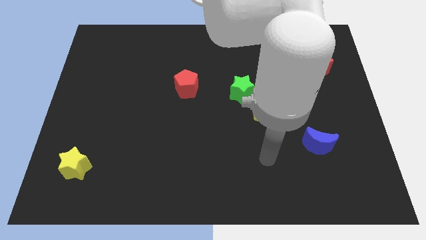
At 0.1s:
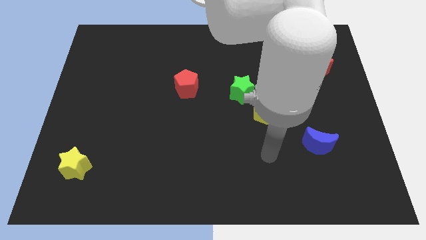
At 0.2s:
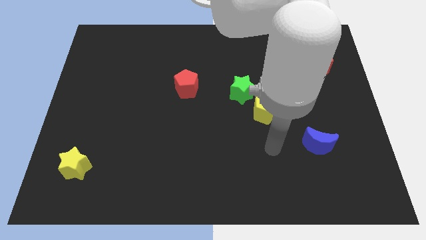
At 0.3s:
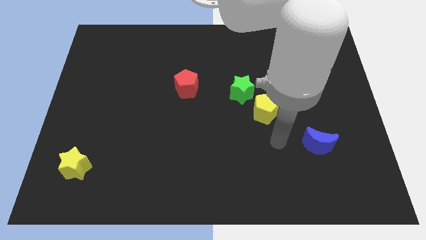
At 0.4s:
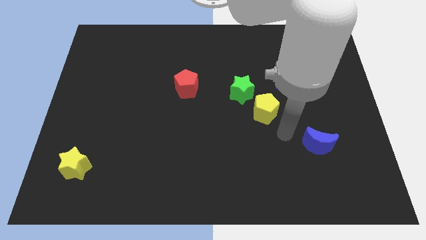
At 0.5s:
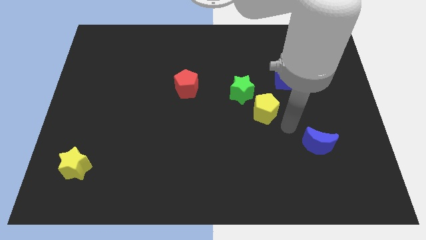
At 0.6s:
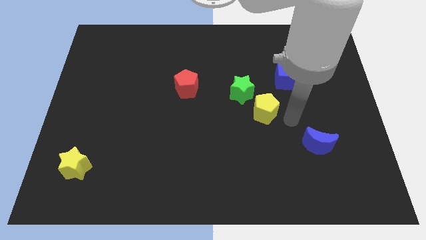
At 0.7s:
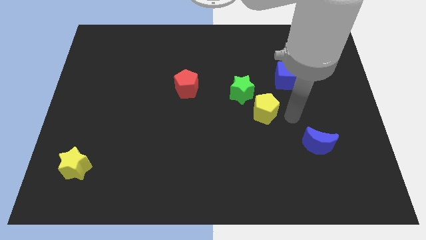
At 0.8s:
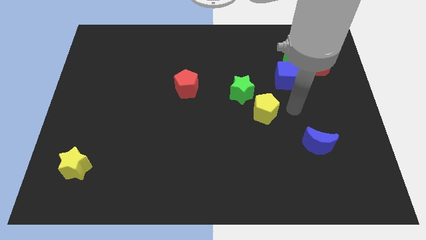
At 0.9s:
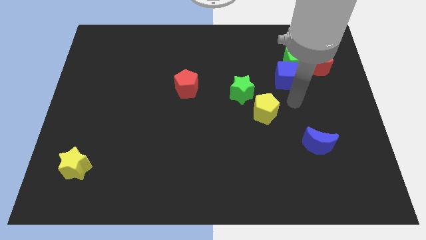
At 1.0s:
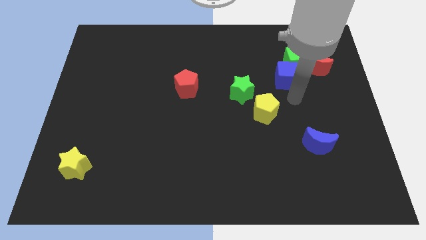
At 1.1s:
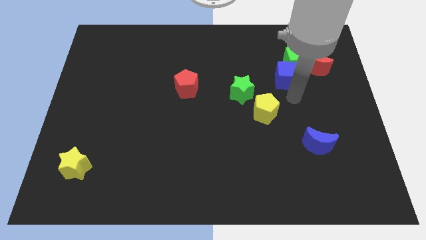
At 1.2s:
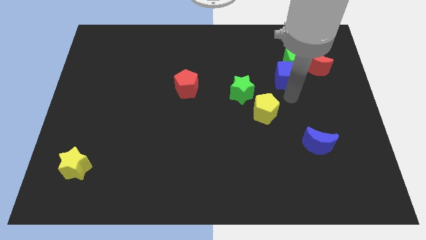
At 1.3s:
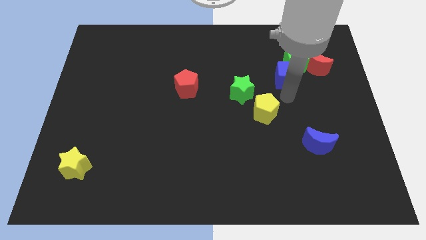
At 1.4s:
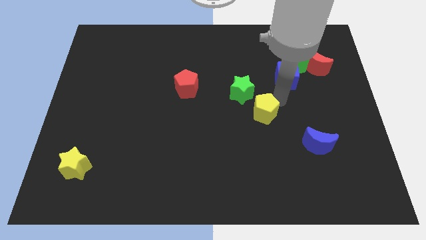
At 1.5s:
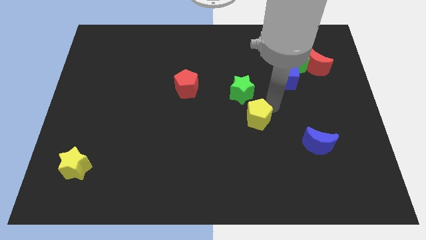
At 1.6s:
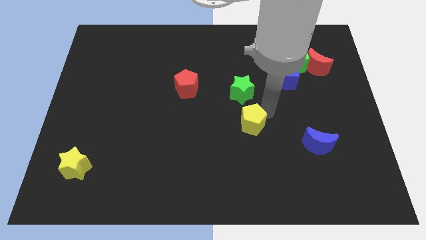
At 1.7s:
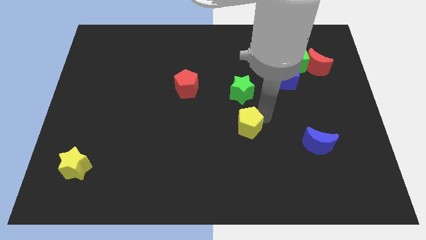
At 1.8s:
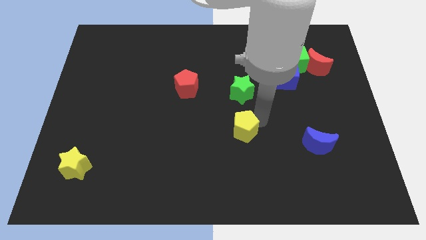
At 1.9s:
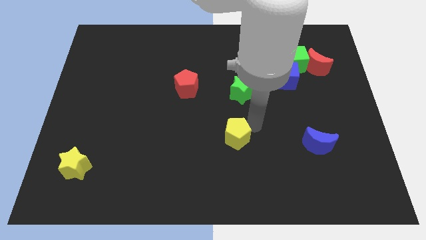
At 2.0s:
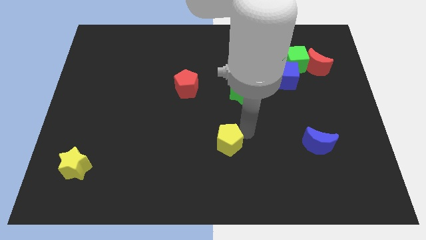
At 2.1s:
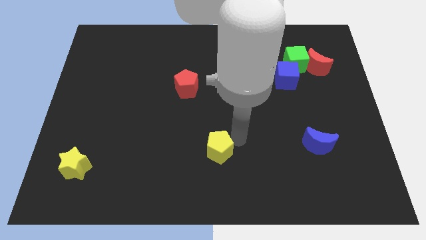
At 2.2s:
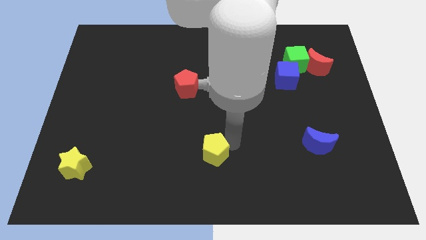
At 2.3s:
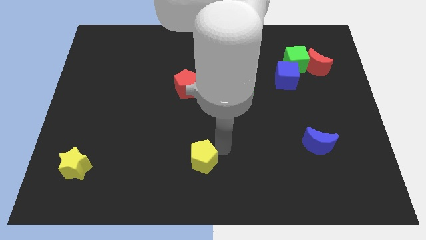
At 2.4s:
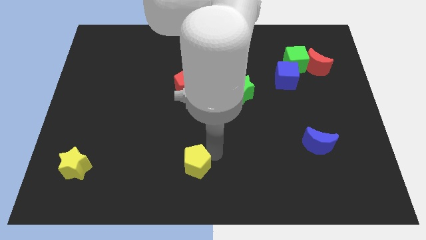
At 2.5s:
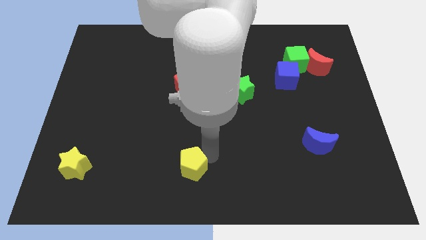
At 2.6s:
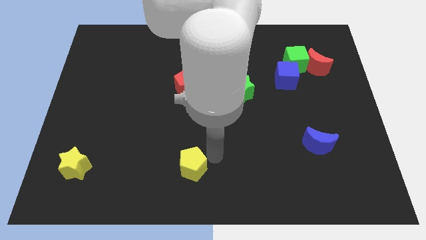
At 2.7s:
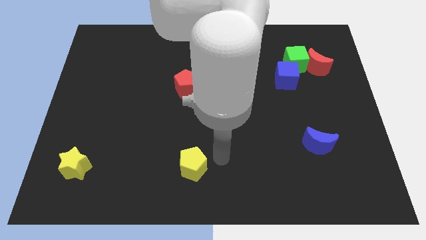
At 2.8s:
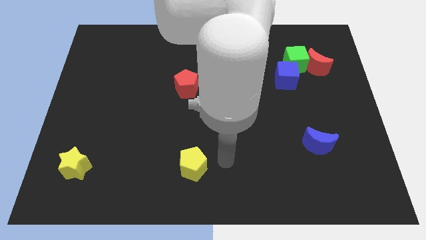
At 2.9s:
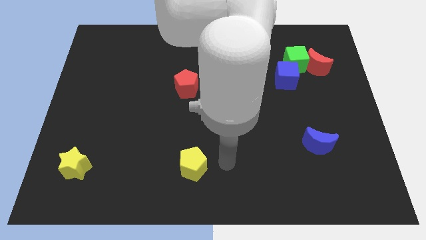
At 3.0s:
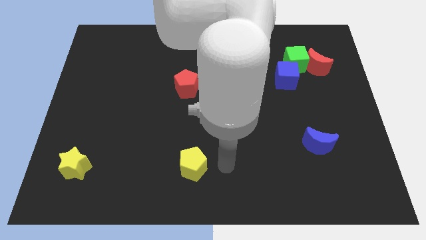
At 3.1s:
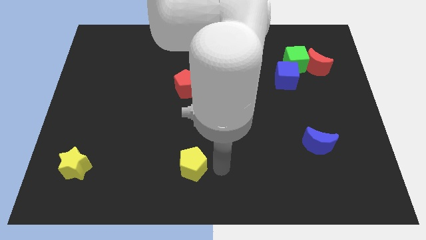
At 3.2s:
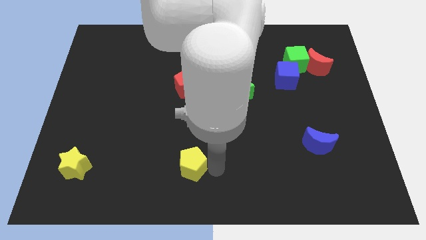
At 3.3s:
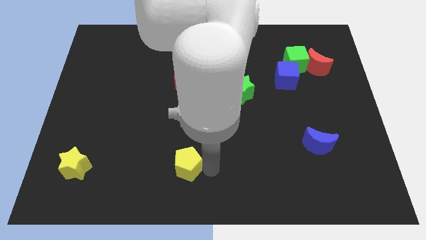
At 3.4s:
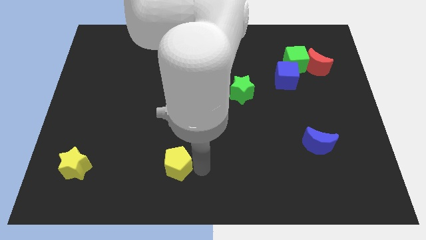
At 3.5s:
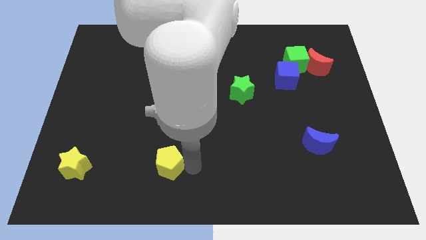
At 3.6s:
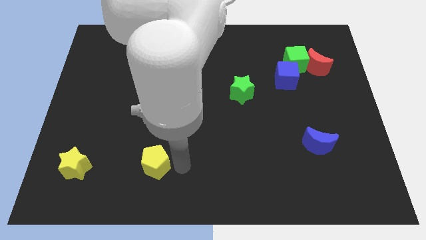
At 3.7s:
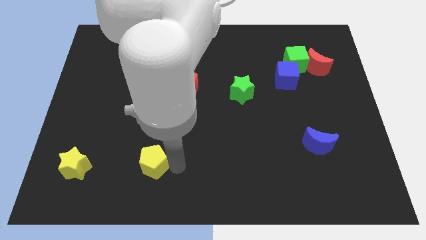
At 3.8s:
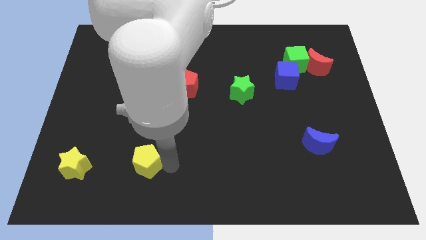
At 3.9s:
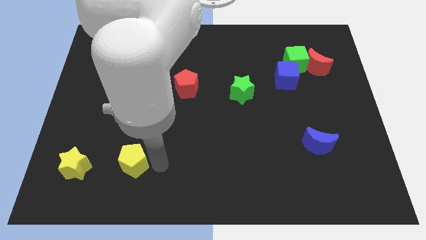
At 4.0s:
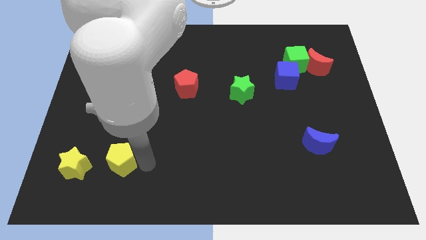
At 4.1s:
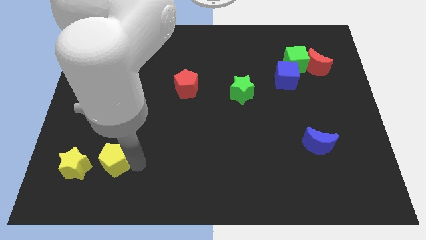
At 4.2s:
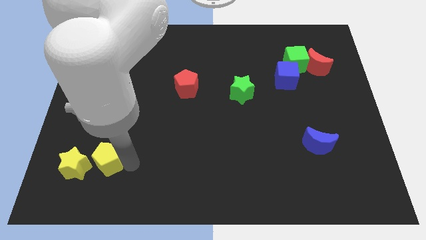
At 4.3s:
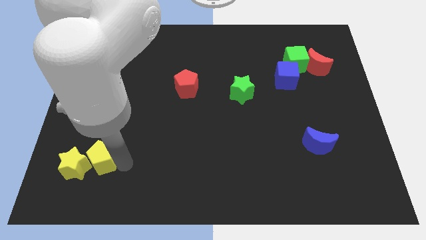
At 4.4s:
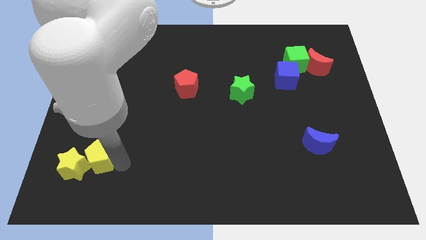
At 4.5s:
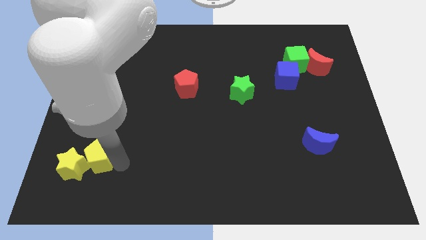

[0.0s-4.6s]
slide the yellow pentagon close to the yellow star

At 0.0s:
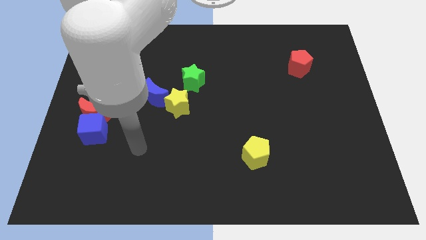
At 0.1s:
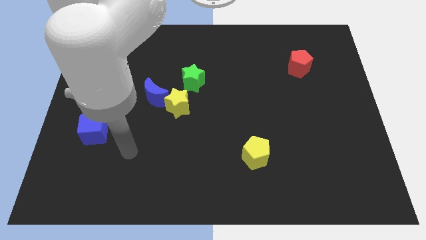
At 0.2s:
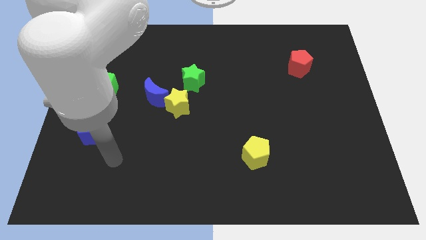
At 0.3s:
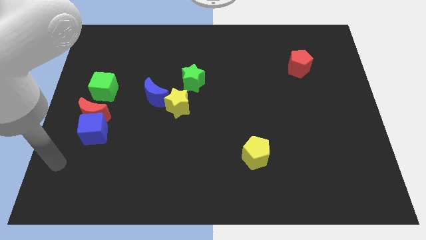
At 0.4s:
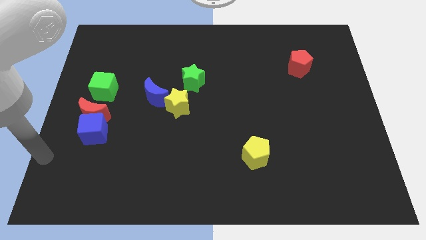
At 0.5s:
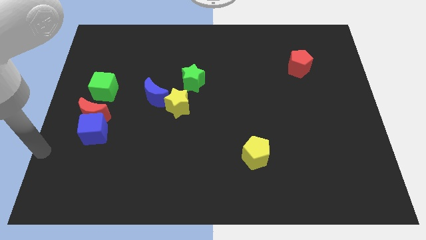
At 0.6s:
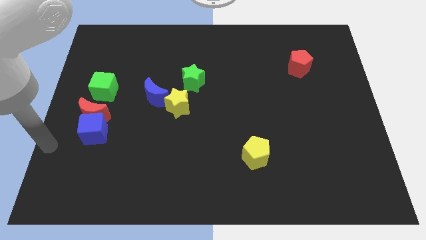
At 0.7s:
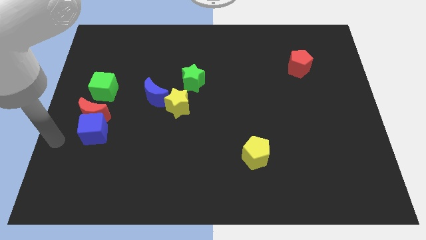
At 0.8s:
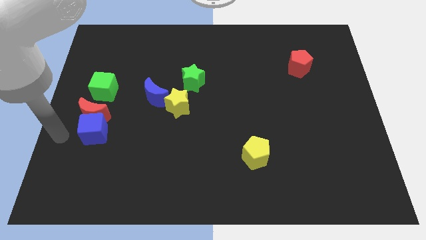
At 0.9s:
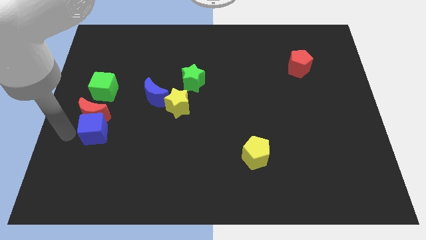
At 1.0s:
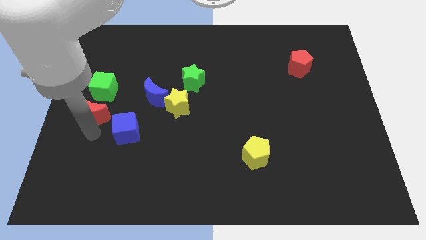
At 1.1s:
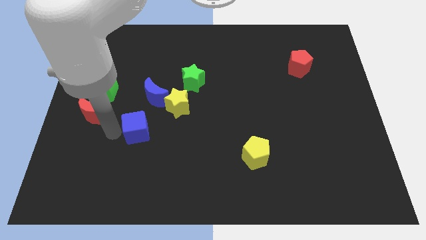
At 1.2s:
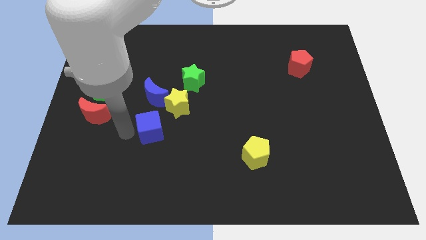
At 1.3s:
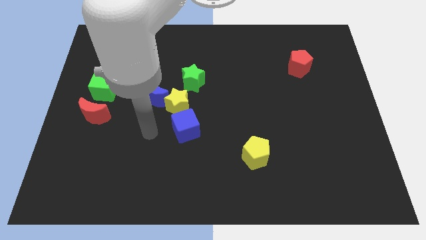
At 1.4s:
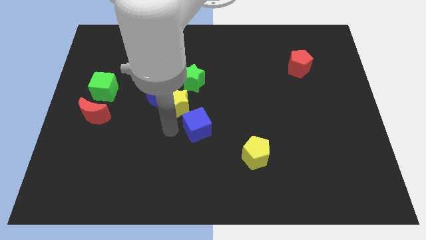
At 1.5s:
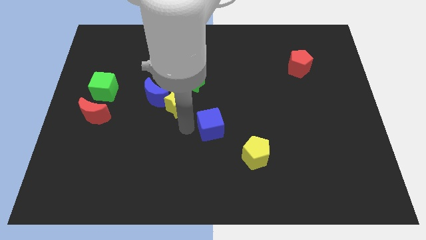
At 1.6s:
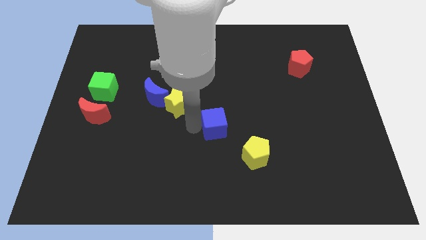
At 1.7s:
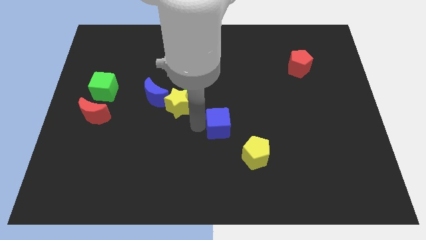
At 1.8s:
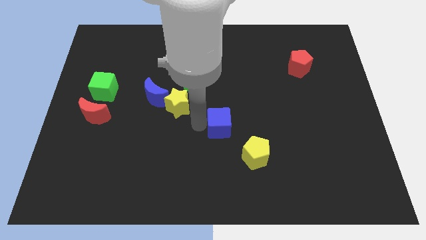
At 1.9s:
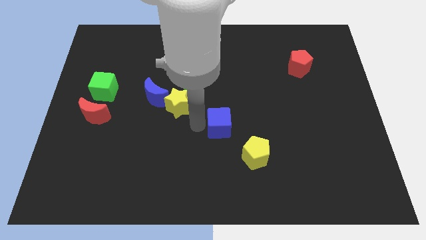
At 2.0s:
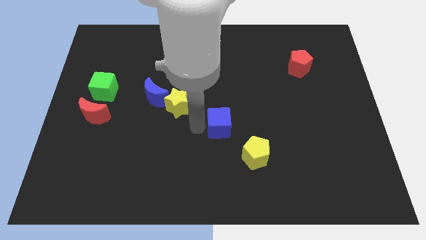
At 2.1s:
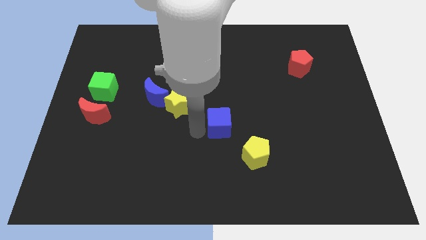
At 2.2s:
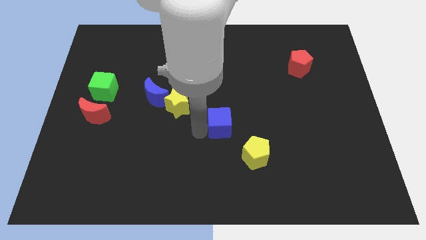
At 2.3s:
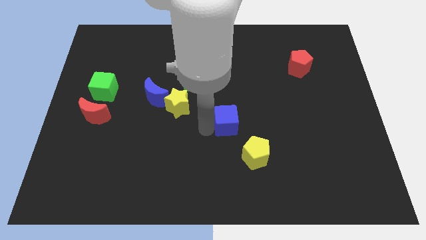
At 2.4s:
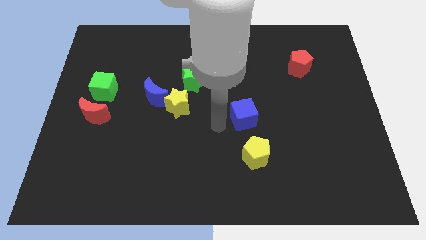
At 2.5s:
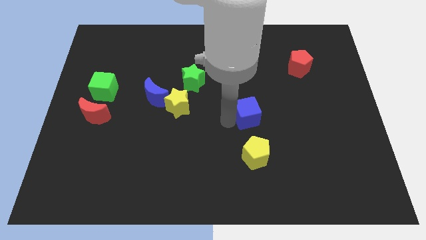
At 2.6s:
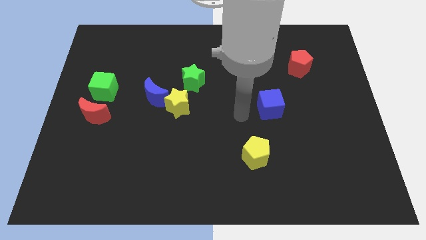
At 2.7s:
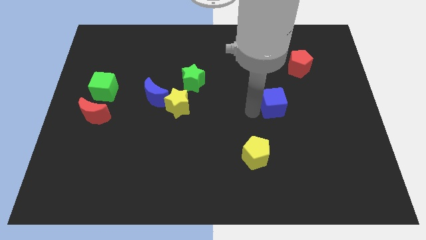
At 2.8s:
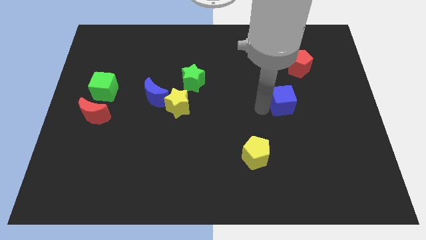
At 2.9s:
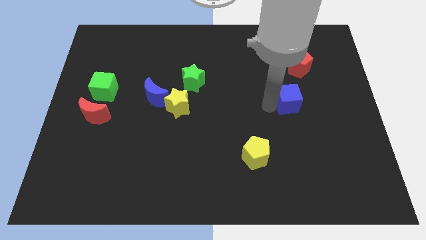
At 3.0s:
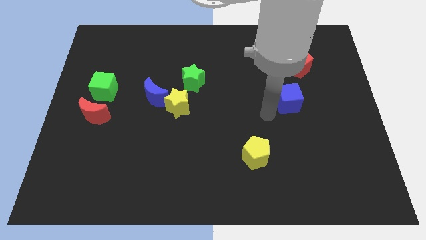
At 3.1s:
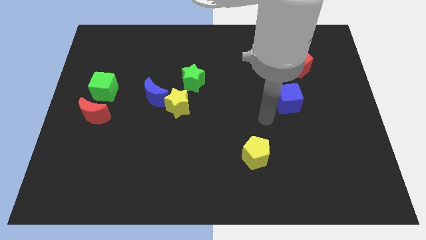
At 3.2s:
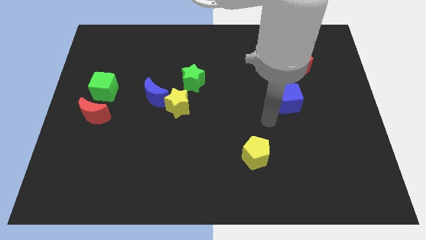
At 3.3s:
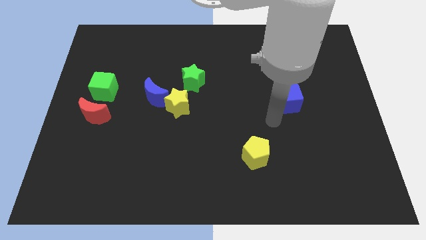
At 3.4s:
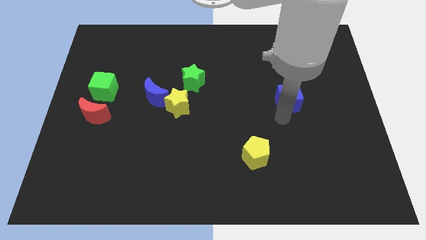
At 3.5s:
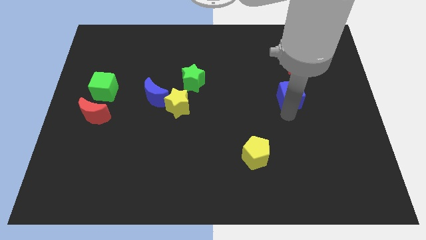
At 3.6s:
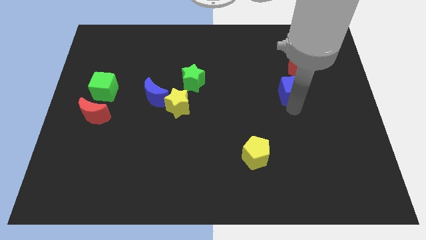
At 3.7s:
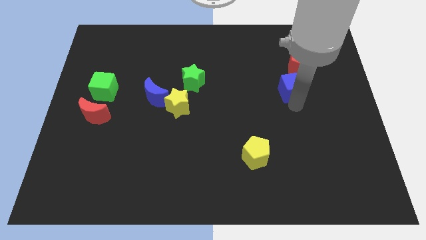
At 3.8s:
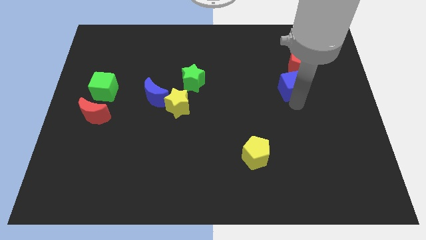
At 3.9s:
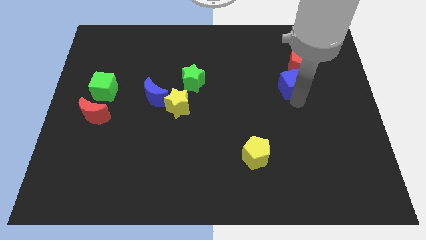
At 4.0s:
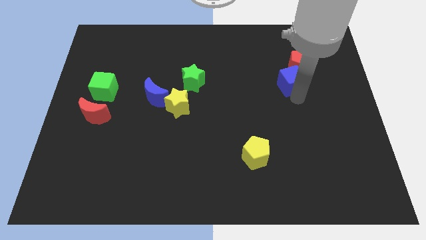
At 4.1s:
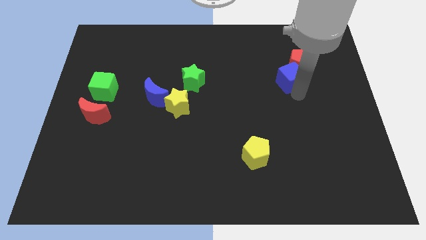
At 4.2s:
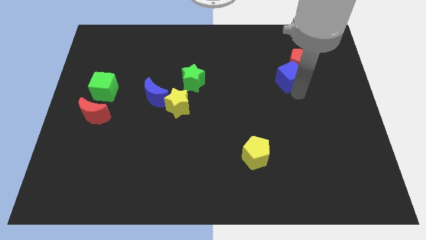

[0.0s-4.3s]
move the blue cube next to the red pentagon
